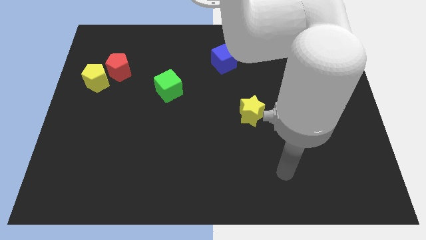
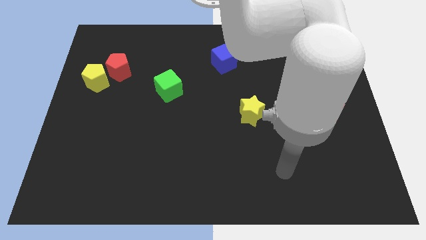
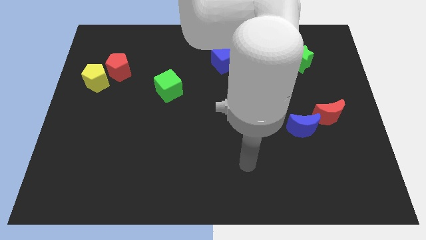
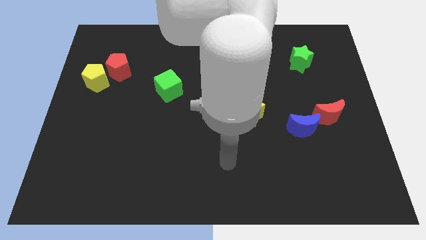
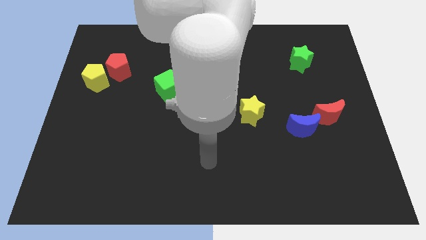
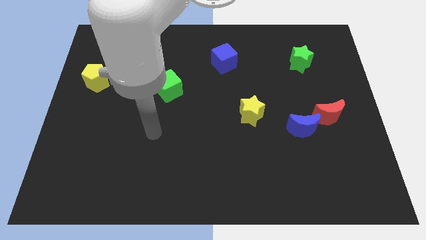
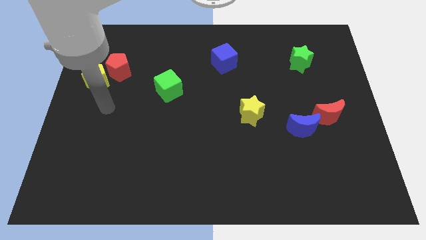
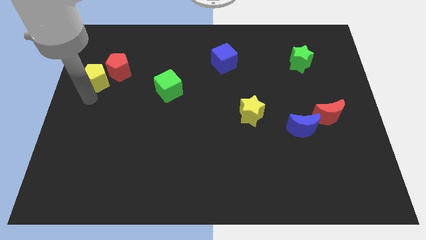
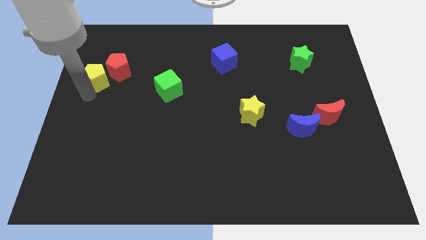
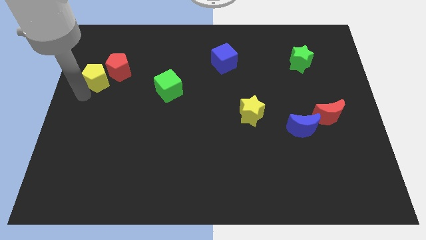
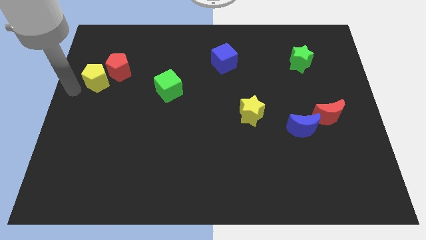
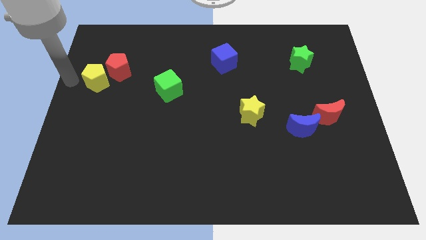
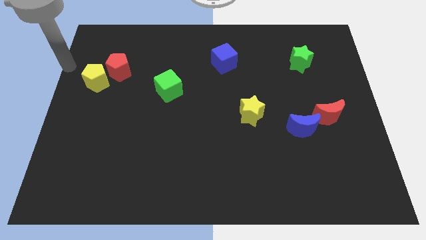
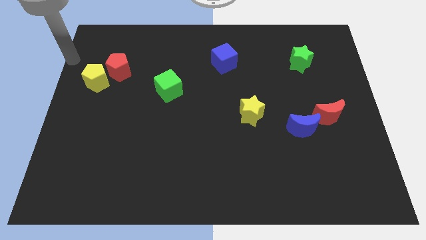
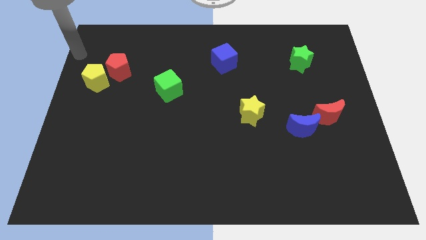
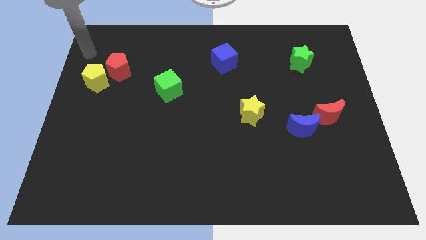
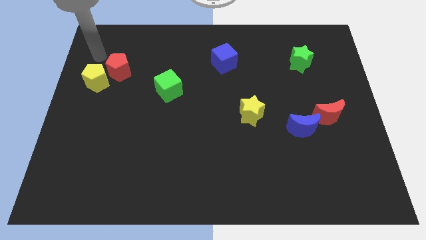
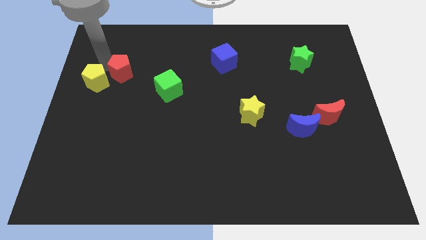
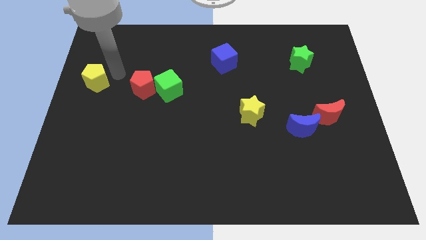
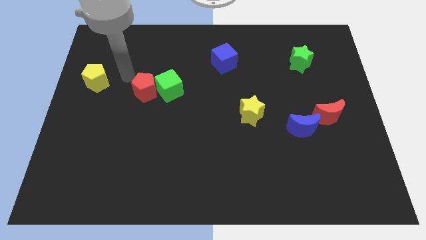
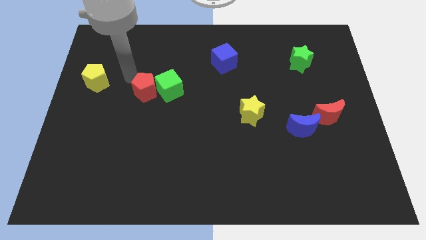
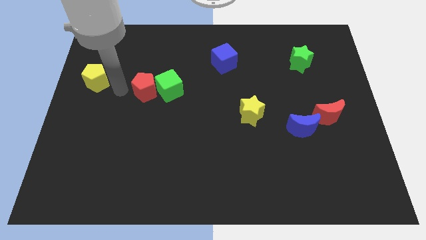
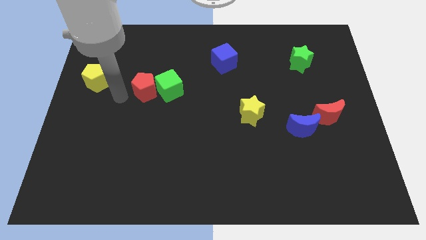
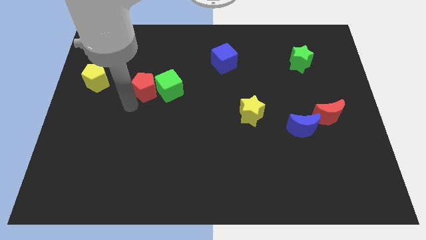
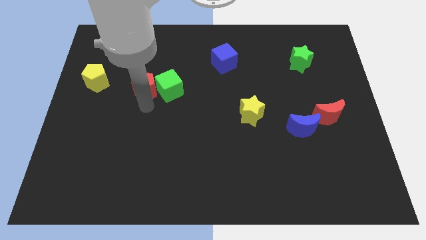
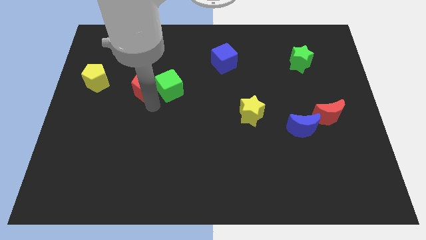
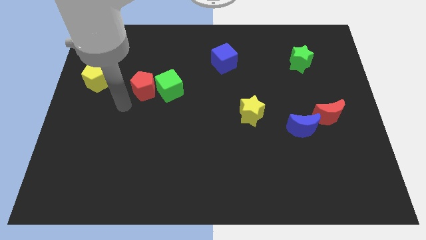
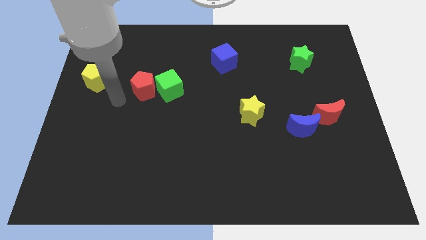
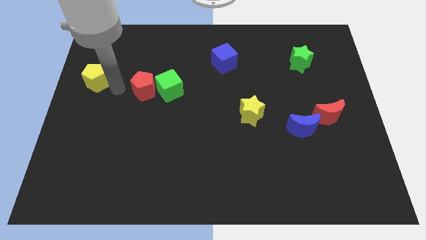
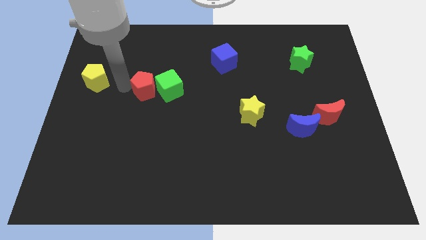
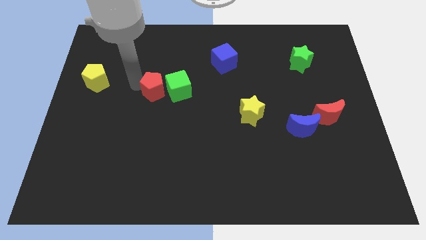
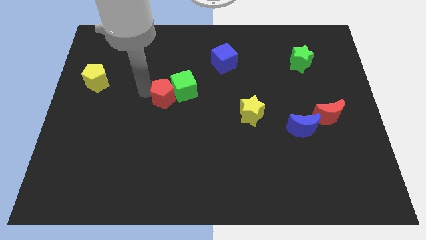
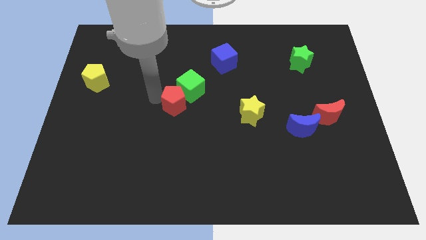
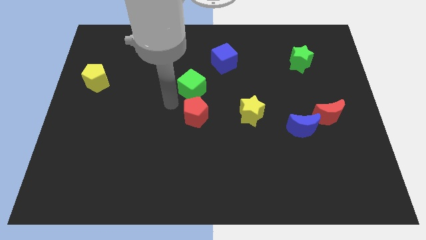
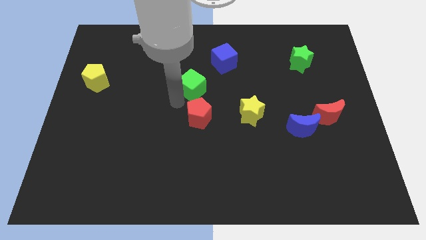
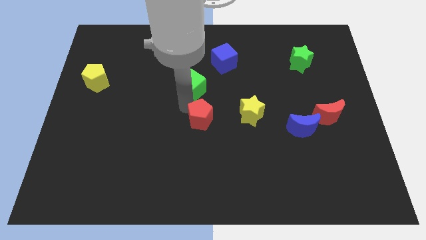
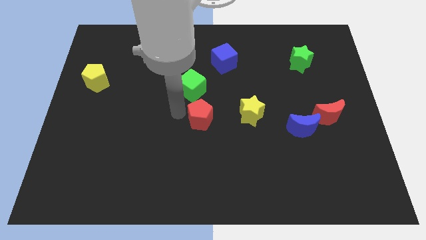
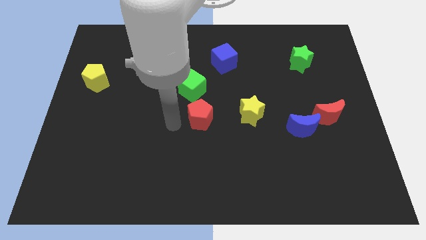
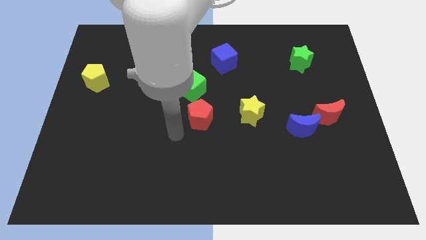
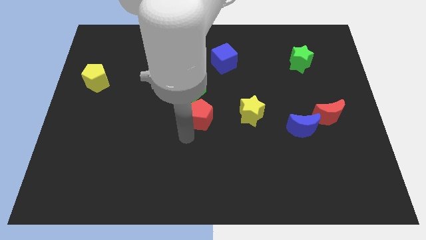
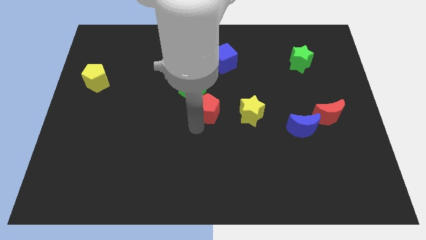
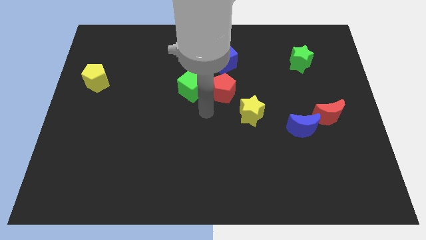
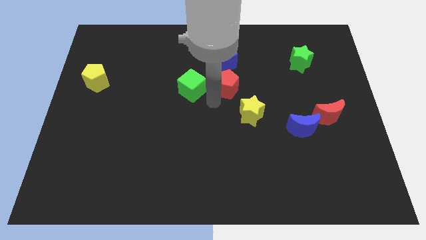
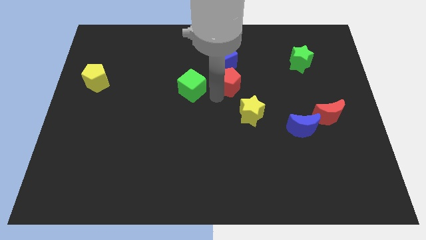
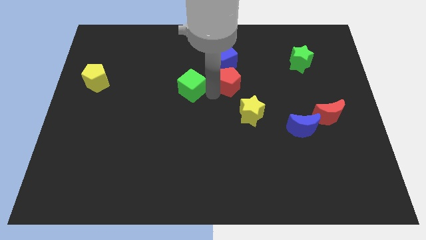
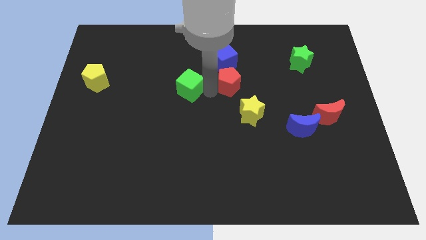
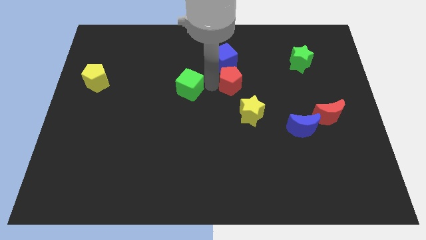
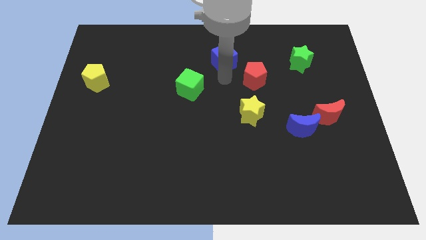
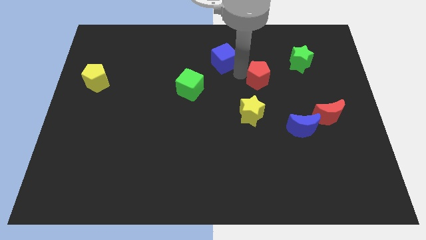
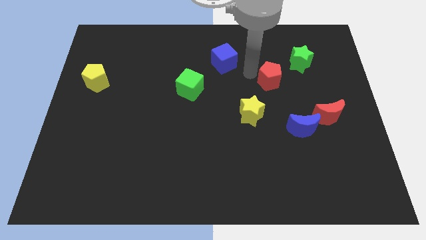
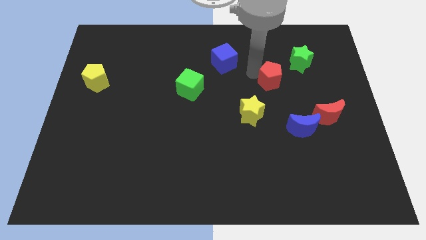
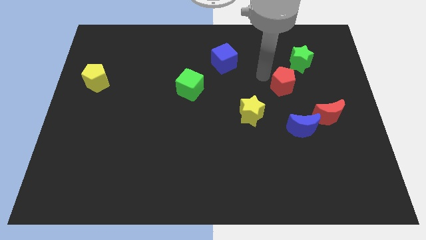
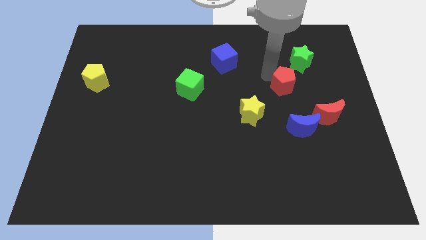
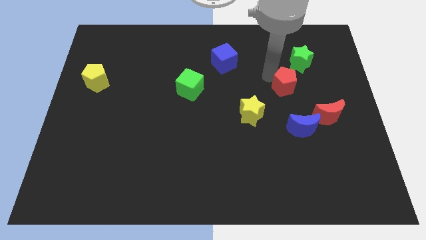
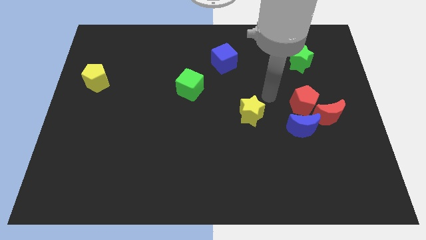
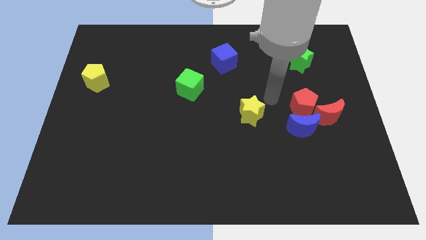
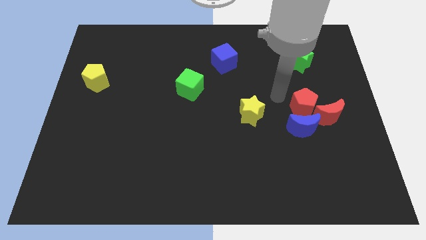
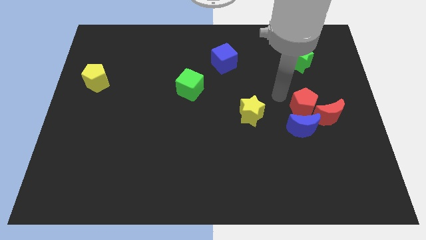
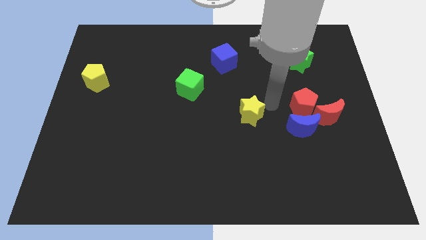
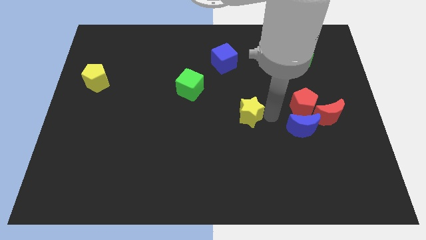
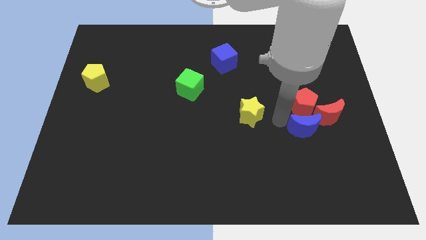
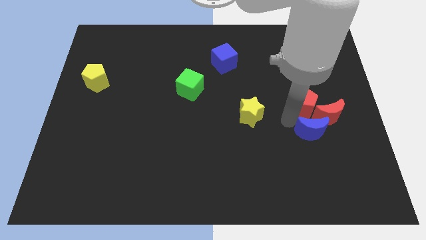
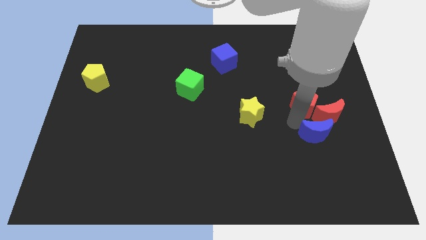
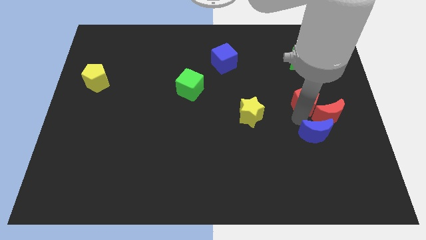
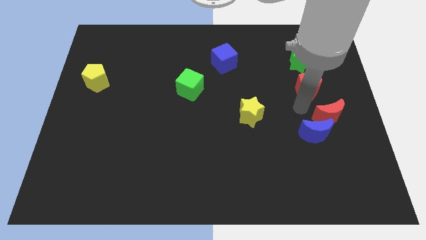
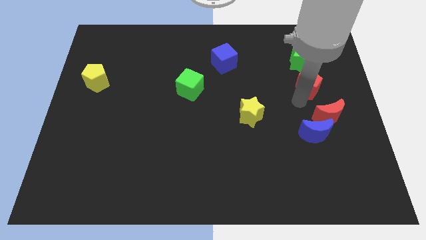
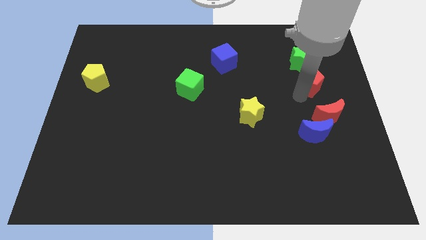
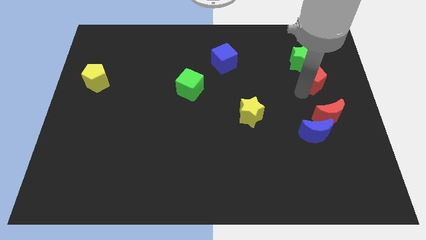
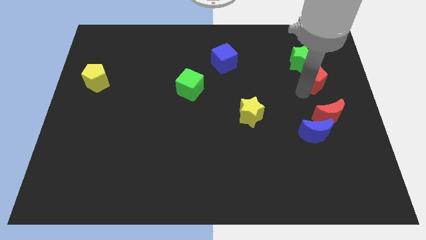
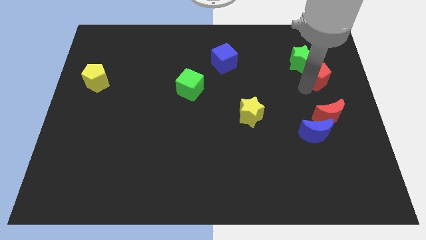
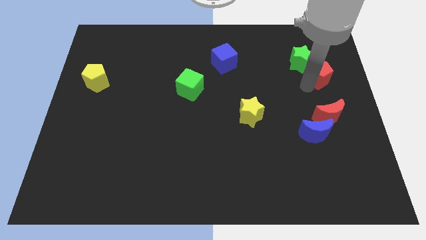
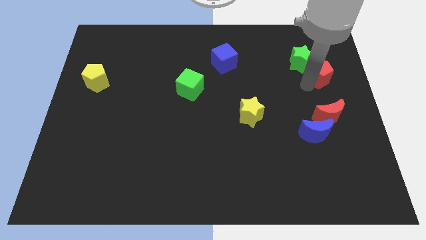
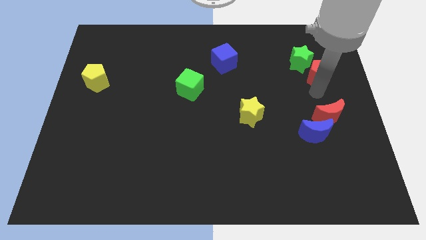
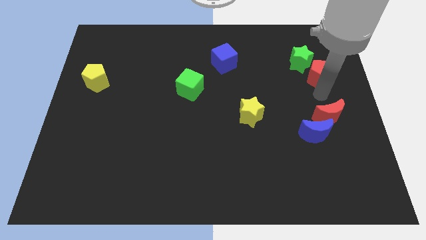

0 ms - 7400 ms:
push the red pentagon towards the green star

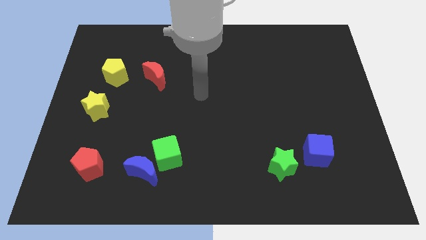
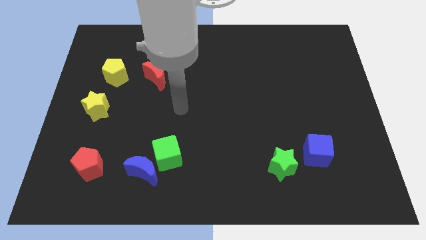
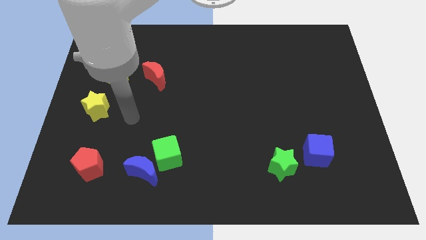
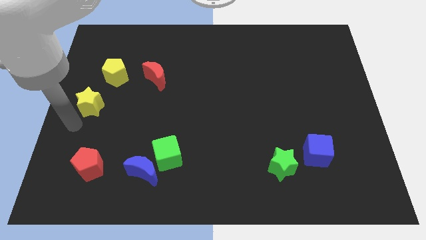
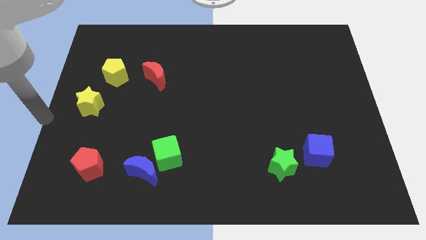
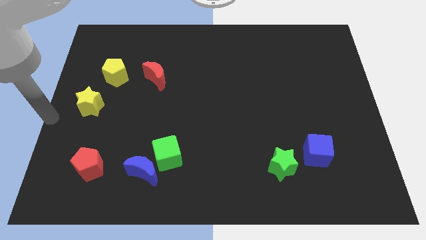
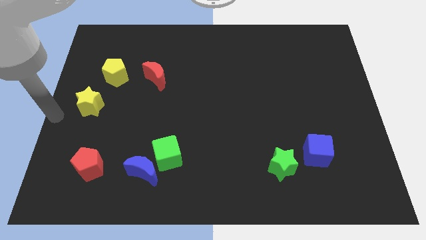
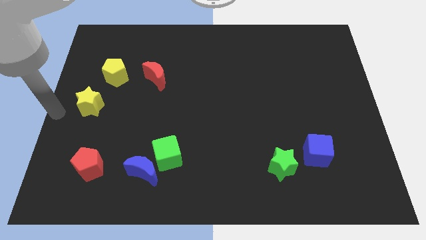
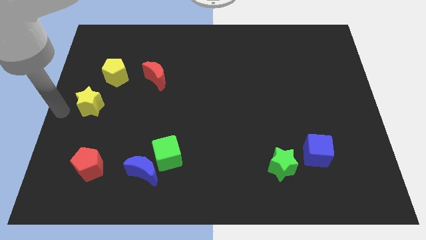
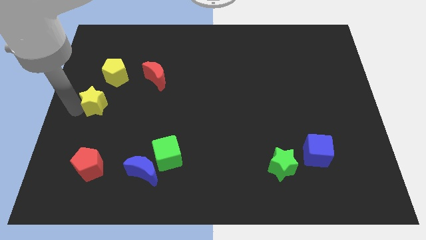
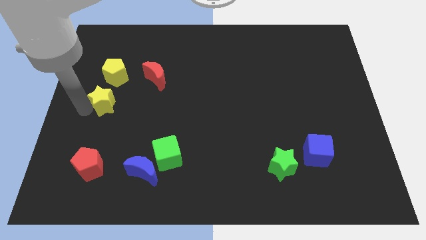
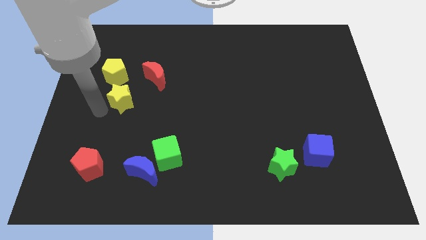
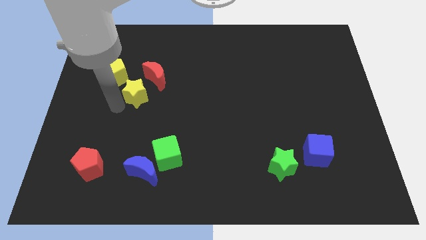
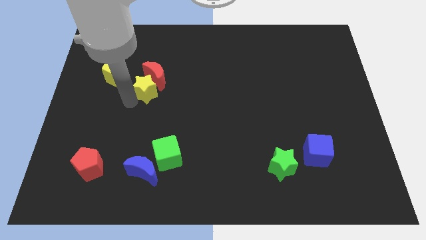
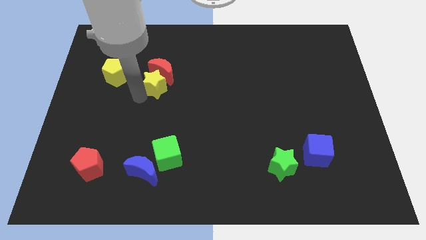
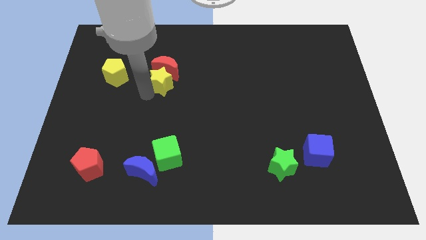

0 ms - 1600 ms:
put the yellow star next to the red moon
